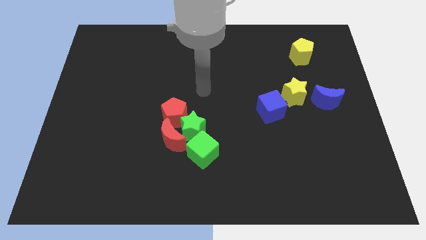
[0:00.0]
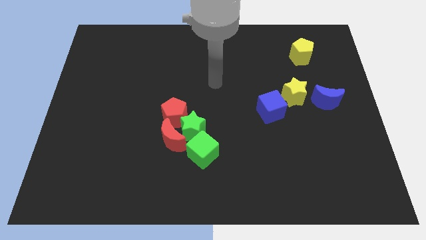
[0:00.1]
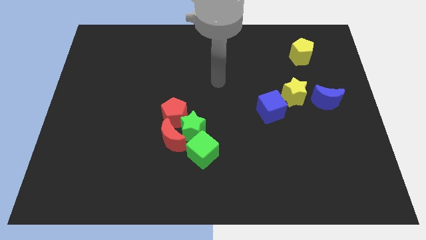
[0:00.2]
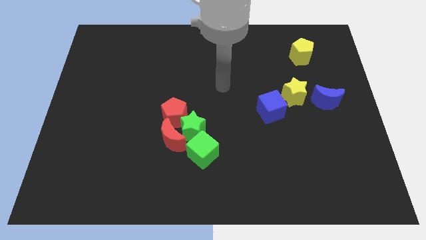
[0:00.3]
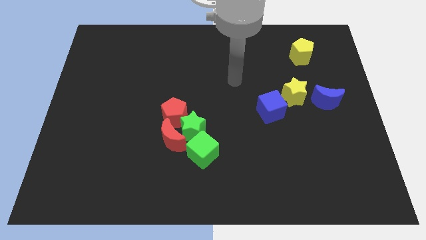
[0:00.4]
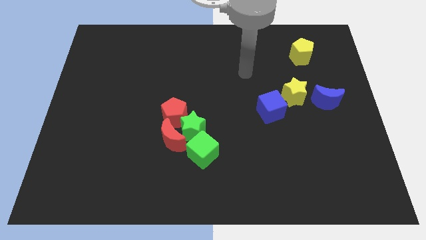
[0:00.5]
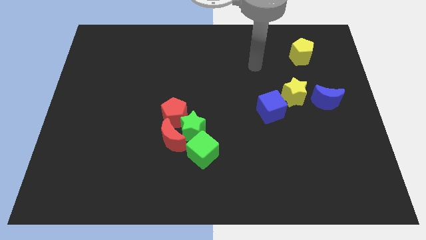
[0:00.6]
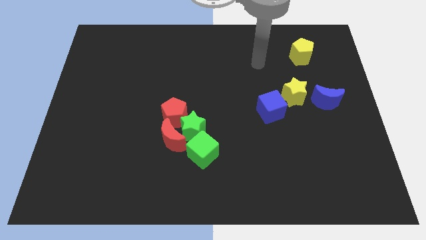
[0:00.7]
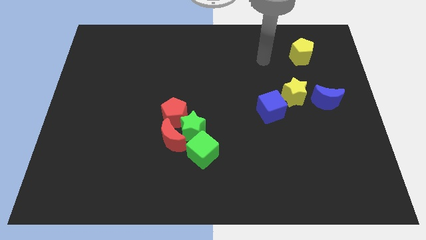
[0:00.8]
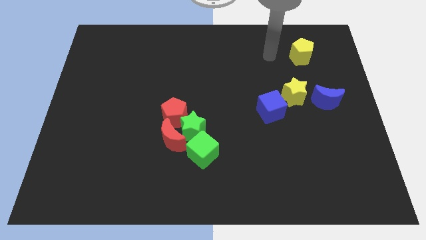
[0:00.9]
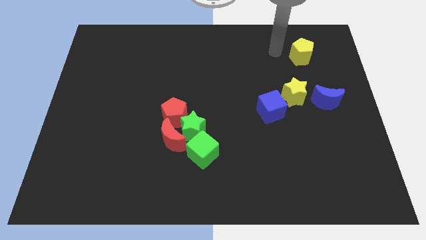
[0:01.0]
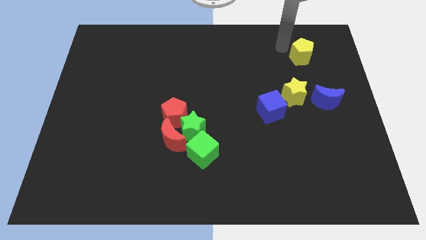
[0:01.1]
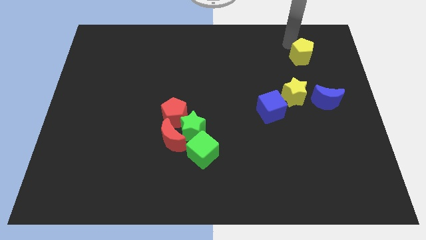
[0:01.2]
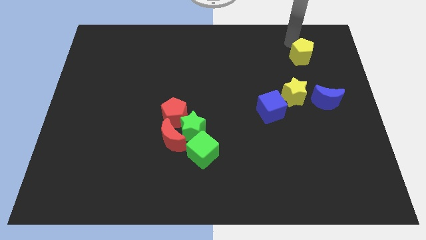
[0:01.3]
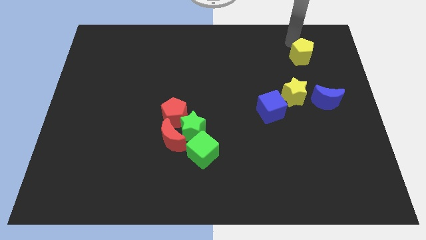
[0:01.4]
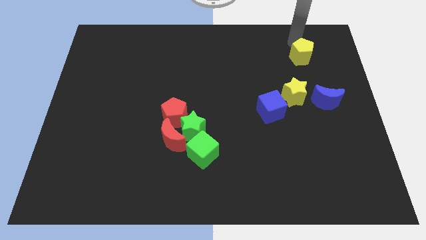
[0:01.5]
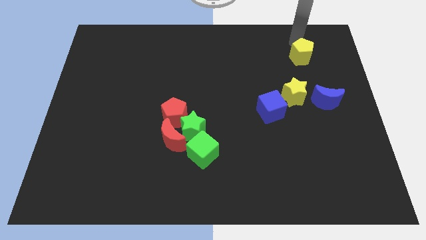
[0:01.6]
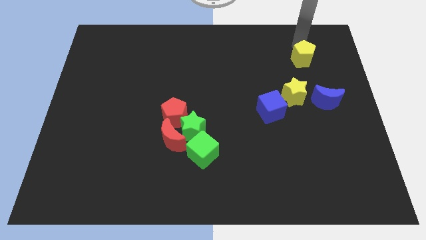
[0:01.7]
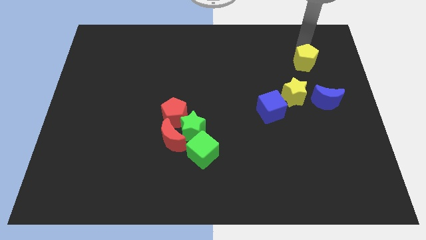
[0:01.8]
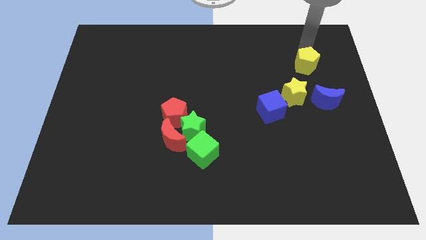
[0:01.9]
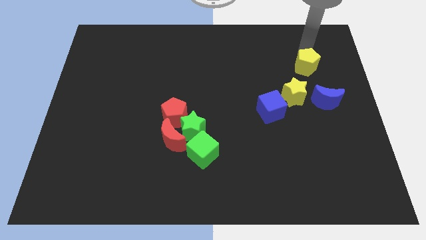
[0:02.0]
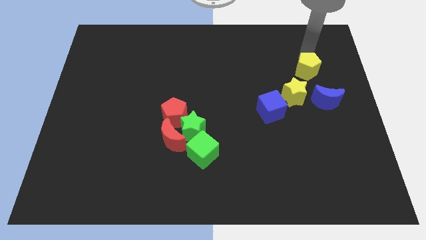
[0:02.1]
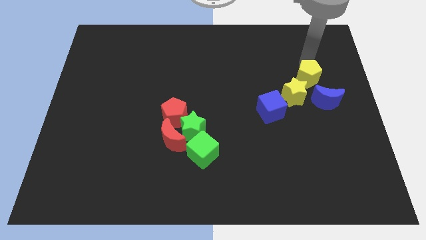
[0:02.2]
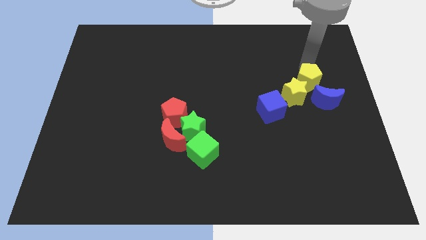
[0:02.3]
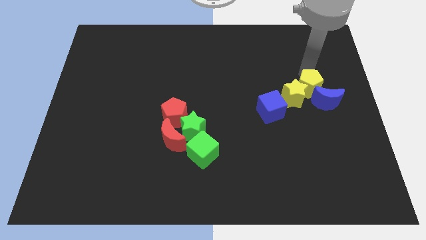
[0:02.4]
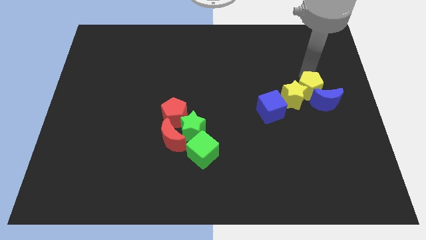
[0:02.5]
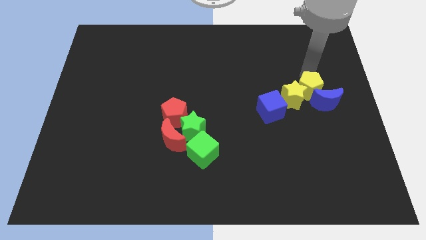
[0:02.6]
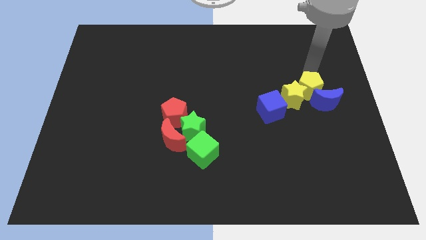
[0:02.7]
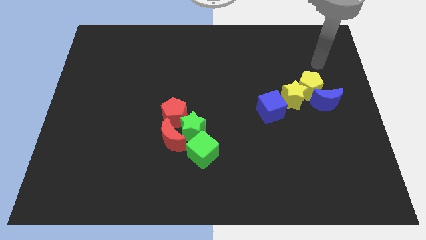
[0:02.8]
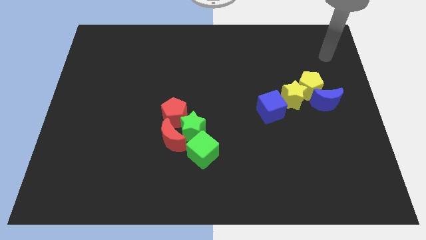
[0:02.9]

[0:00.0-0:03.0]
move the yellow pentagon into the yellow star and blue moon

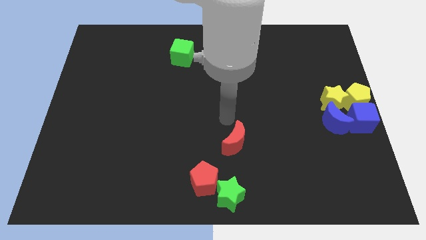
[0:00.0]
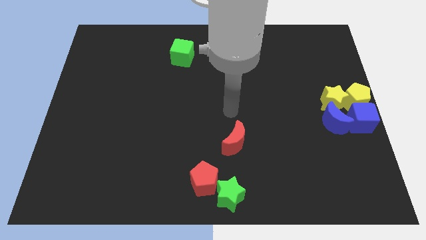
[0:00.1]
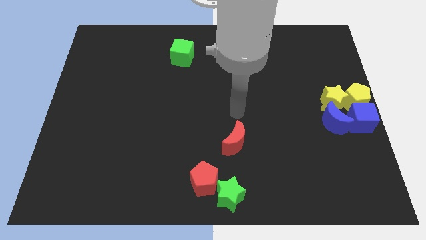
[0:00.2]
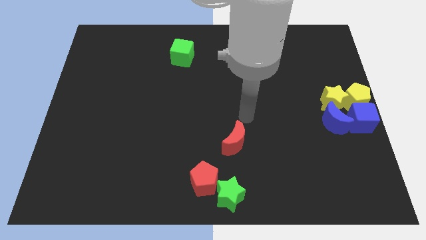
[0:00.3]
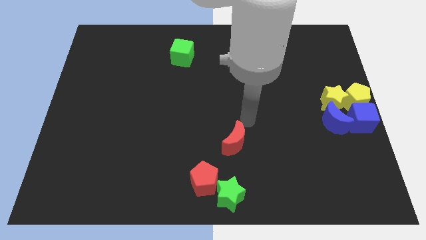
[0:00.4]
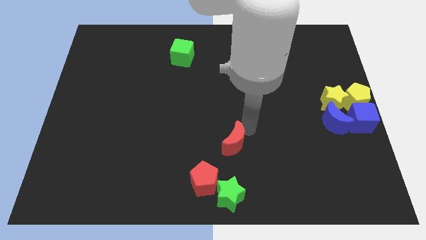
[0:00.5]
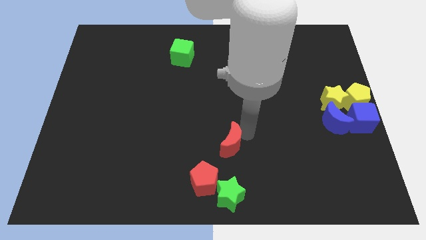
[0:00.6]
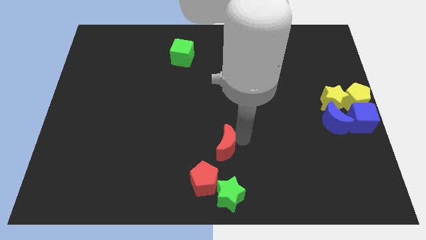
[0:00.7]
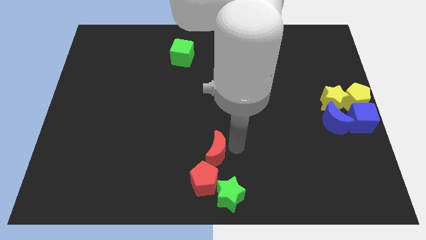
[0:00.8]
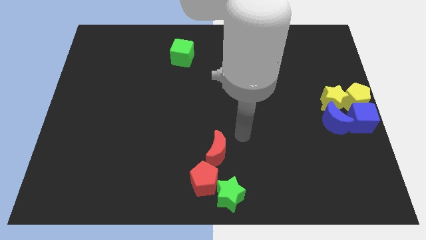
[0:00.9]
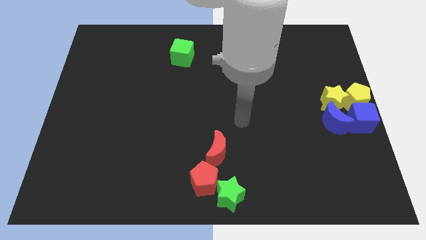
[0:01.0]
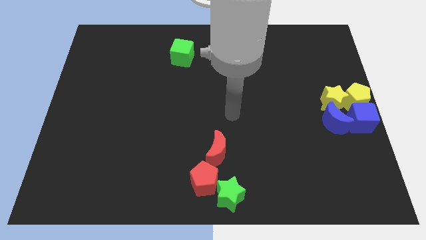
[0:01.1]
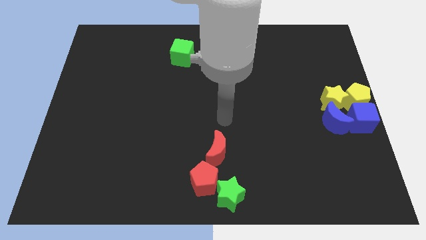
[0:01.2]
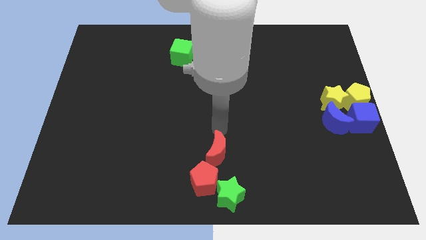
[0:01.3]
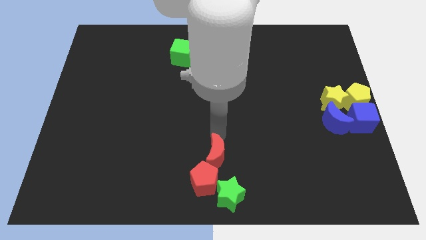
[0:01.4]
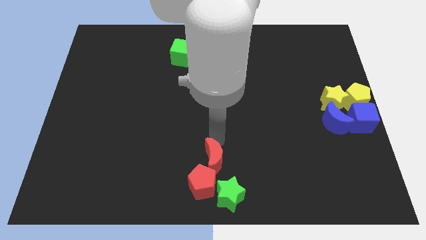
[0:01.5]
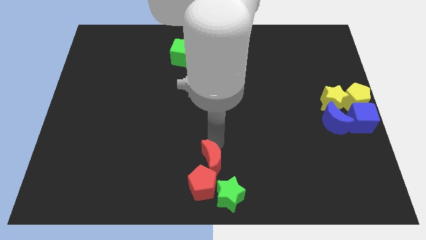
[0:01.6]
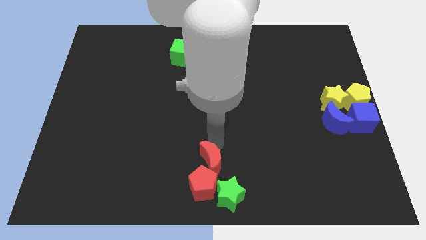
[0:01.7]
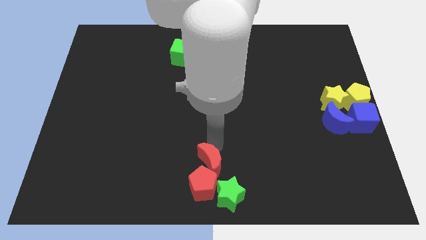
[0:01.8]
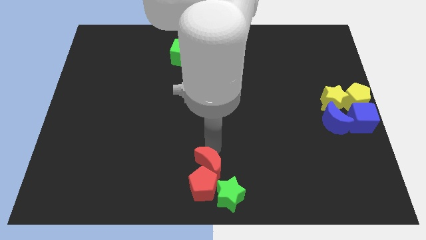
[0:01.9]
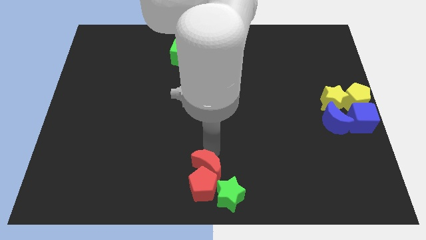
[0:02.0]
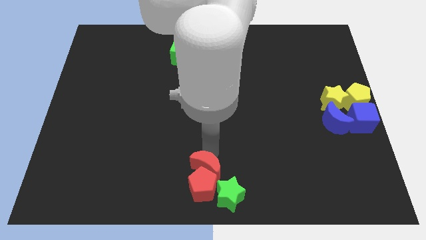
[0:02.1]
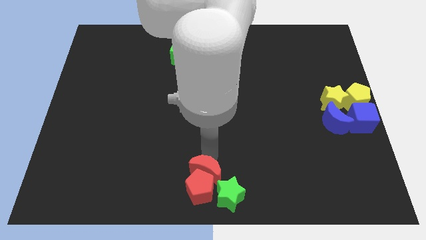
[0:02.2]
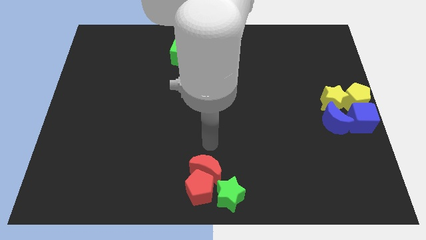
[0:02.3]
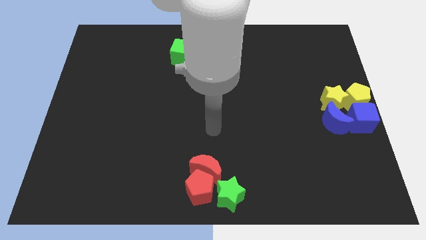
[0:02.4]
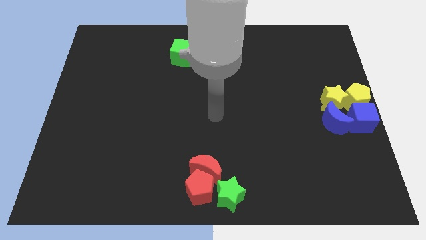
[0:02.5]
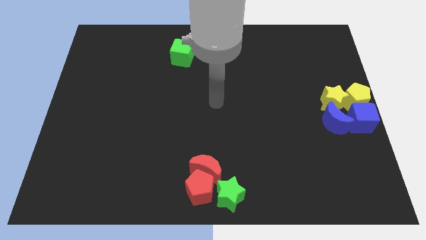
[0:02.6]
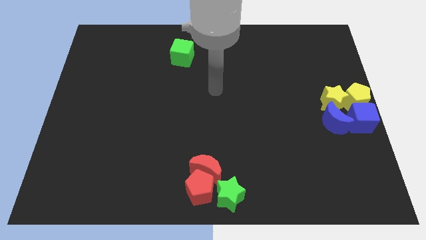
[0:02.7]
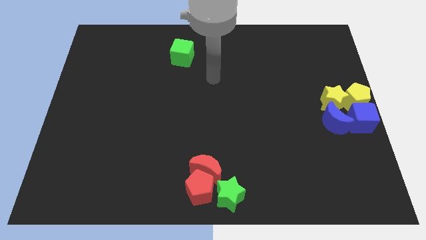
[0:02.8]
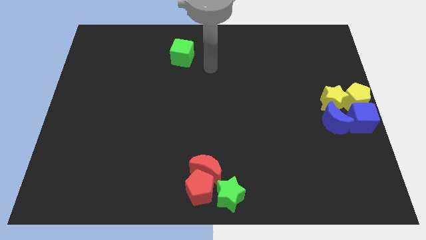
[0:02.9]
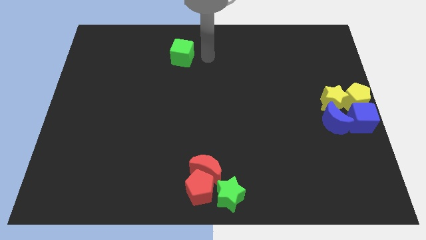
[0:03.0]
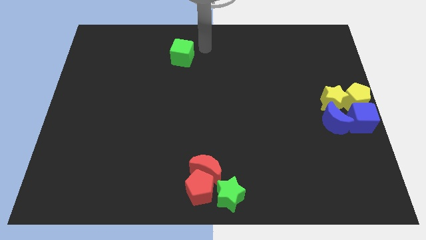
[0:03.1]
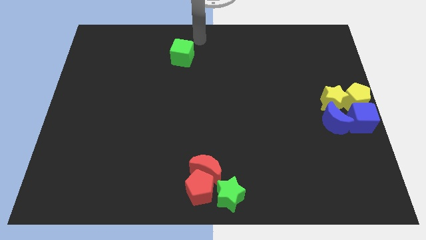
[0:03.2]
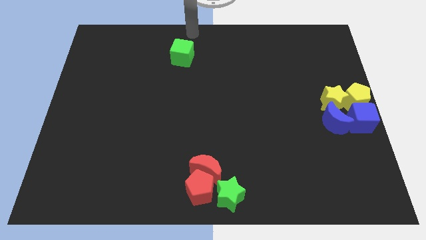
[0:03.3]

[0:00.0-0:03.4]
push the red moon into the red pentagon

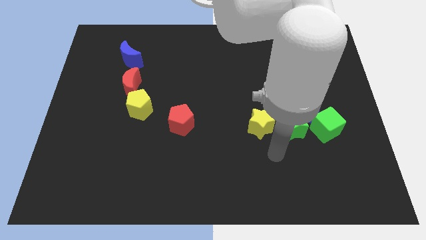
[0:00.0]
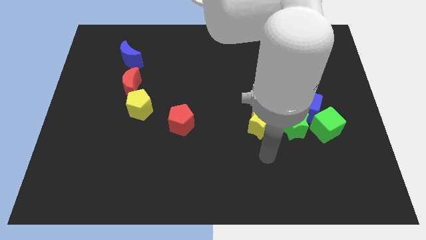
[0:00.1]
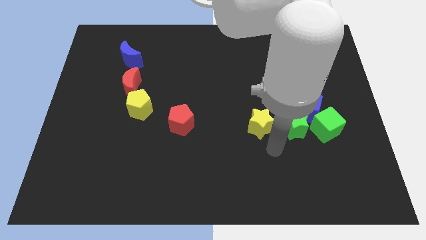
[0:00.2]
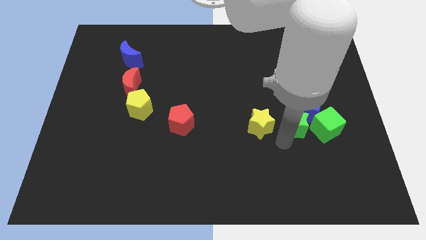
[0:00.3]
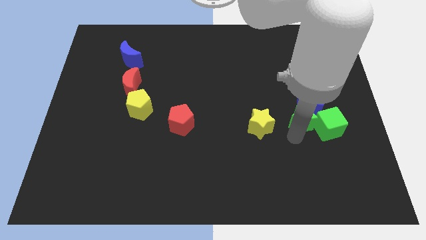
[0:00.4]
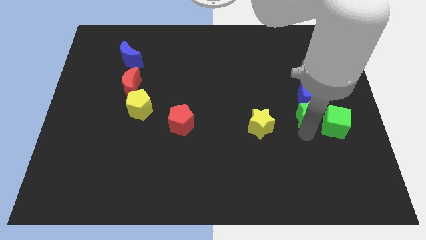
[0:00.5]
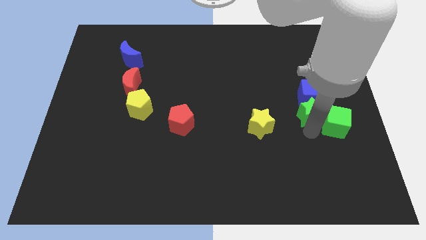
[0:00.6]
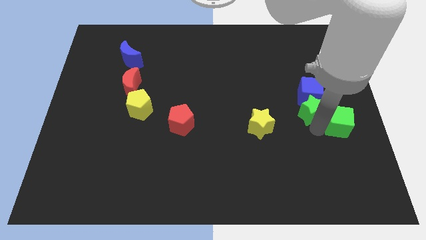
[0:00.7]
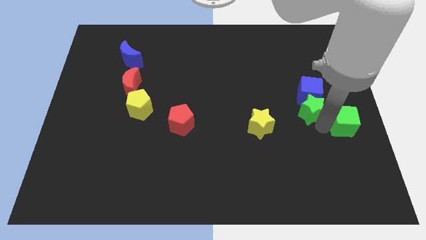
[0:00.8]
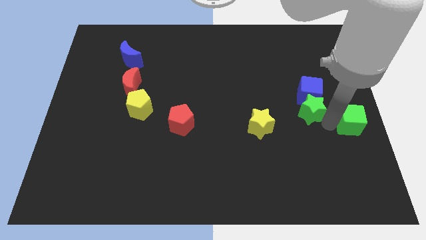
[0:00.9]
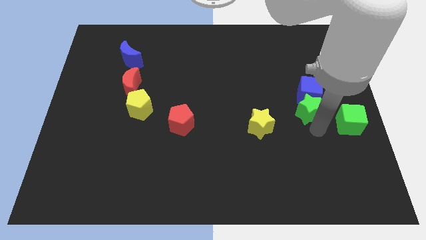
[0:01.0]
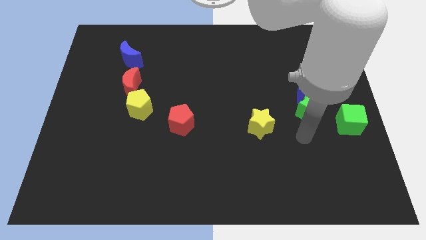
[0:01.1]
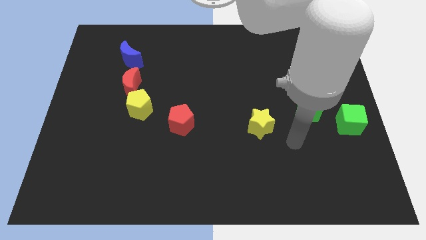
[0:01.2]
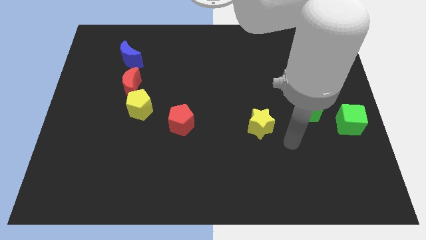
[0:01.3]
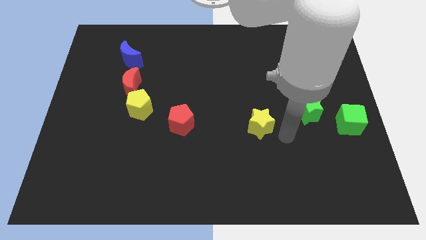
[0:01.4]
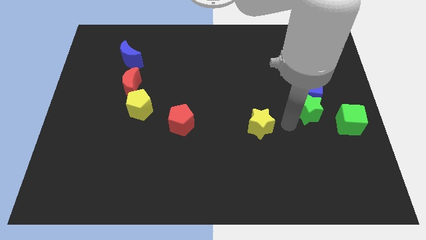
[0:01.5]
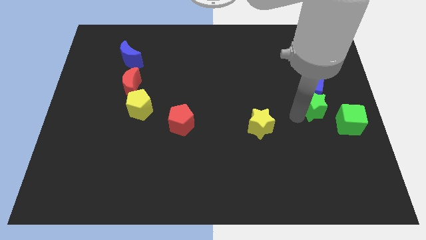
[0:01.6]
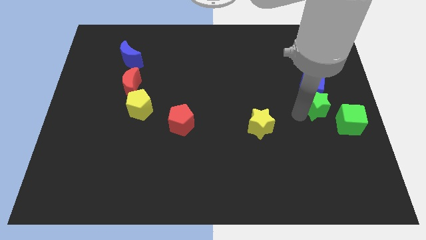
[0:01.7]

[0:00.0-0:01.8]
move green star below the blue cube

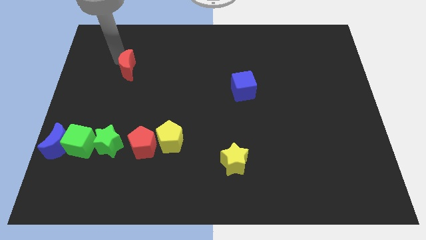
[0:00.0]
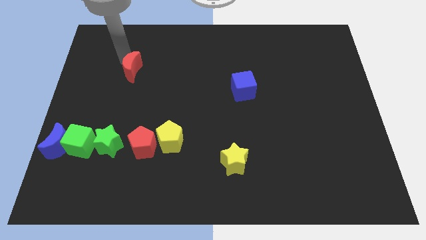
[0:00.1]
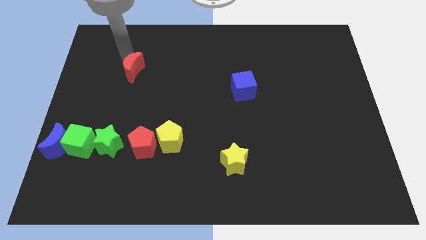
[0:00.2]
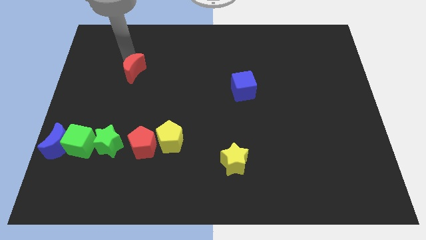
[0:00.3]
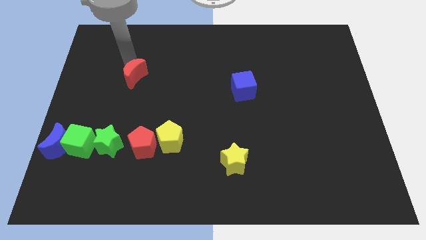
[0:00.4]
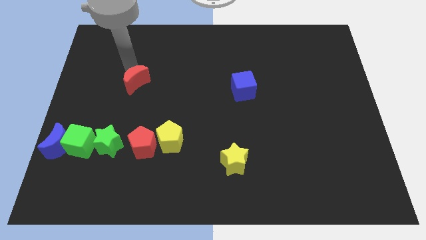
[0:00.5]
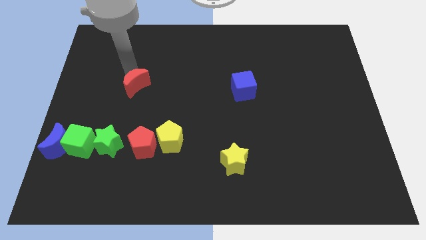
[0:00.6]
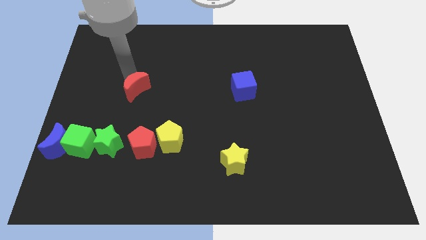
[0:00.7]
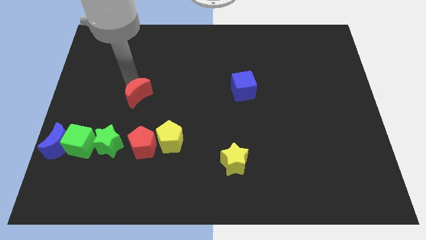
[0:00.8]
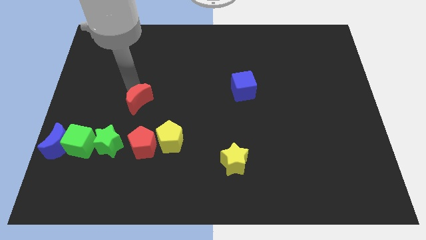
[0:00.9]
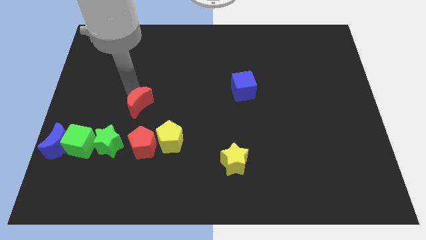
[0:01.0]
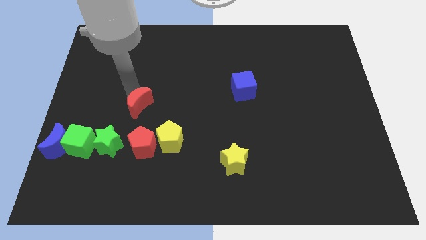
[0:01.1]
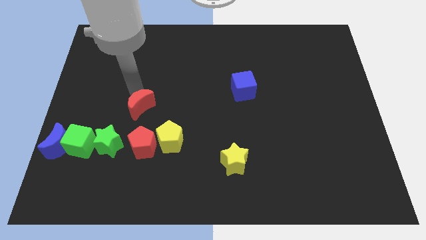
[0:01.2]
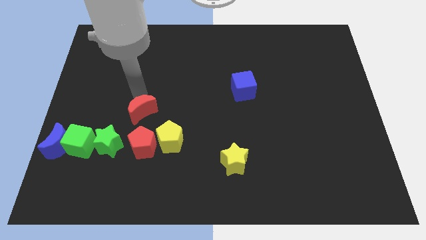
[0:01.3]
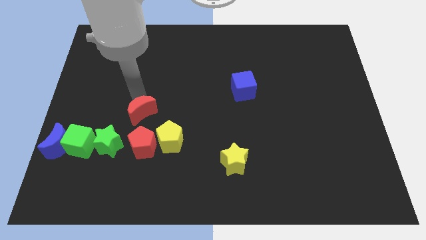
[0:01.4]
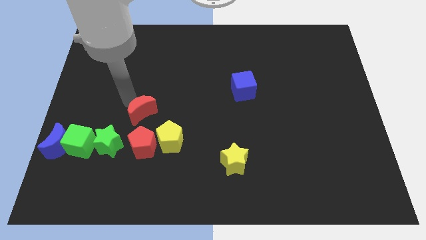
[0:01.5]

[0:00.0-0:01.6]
move red crescent towards the red pentagom
